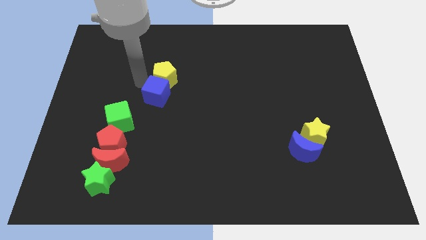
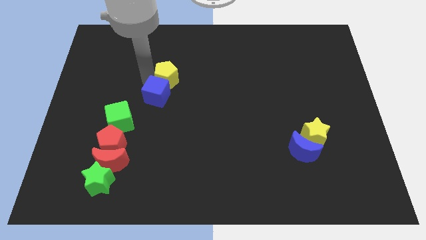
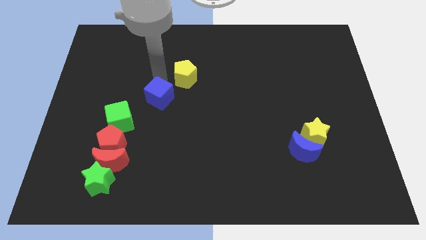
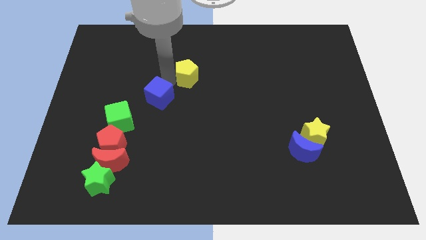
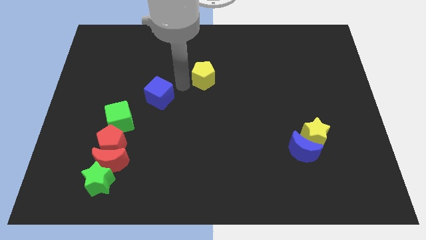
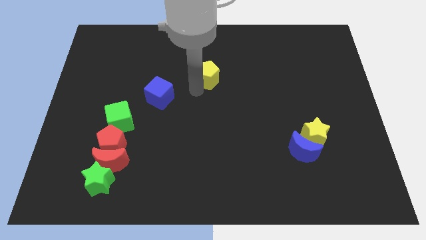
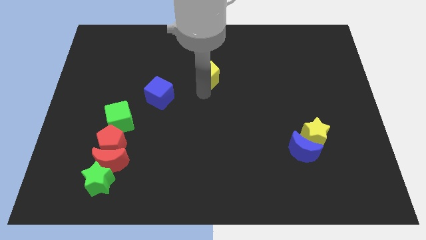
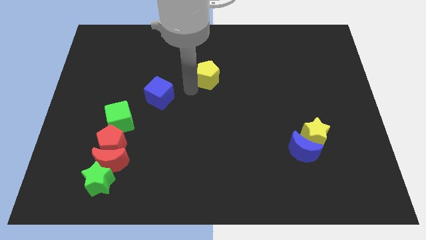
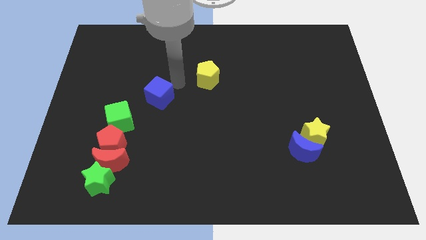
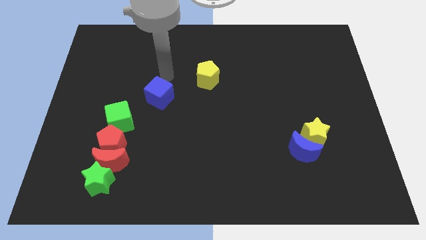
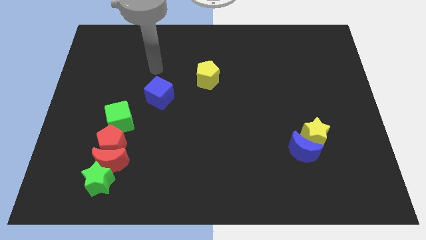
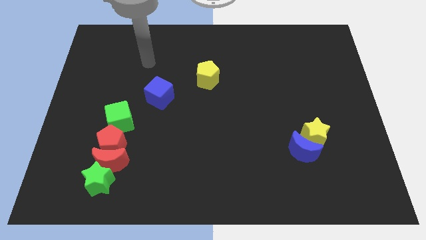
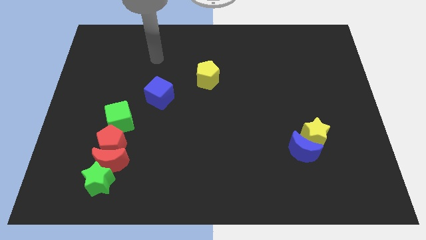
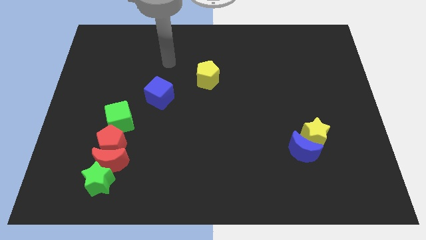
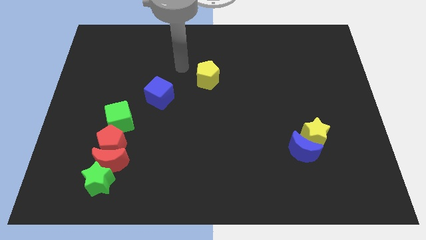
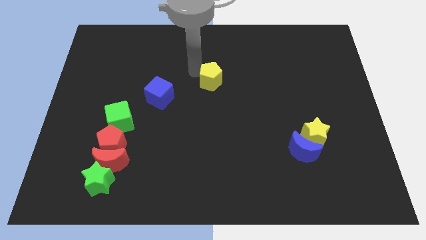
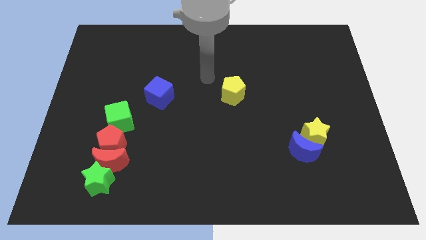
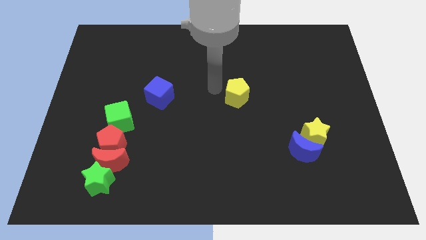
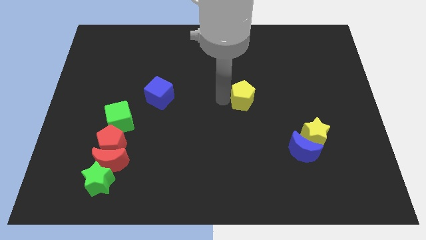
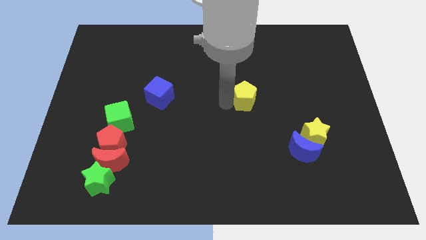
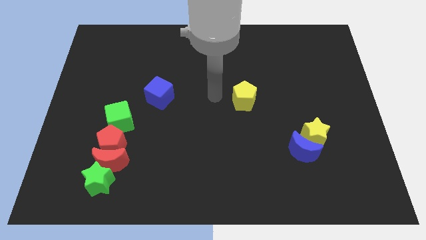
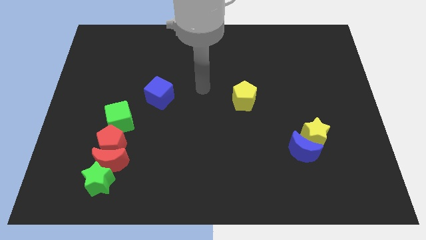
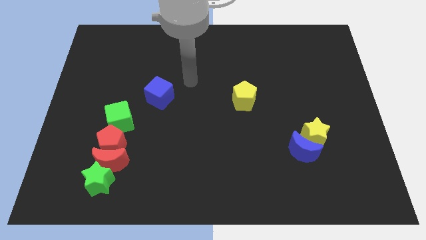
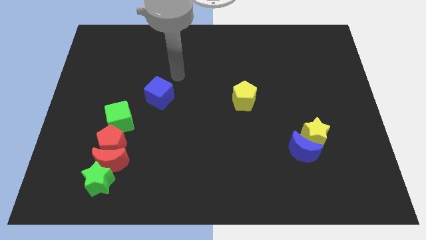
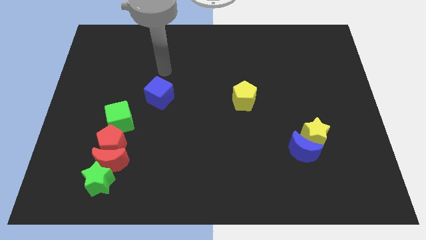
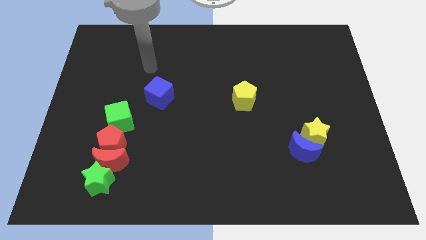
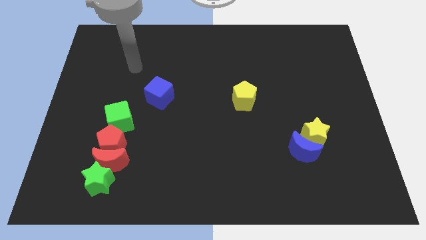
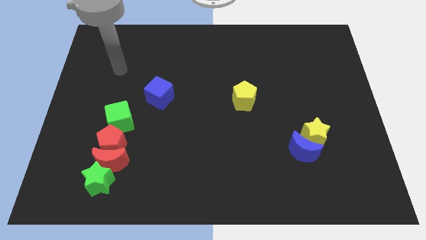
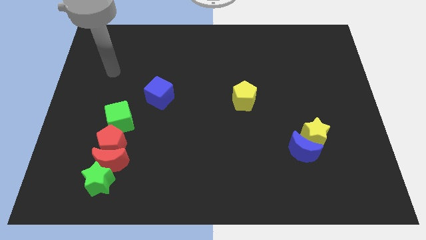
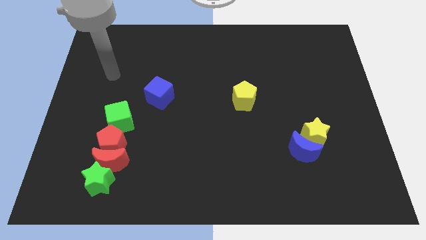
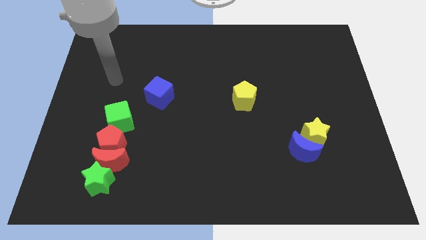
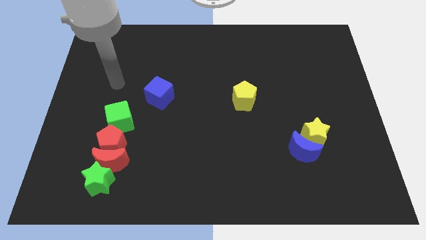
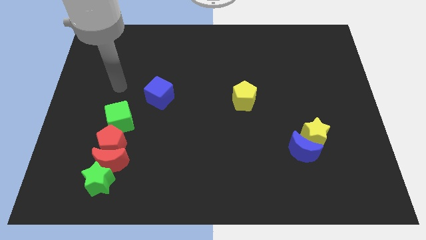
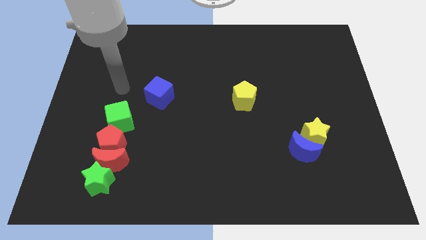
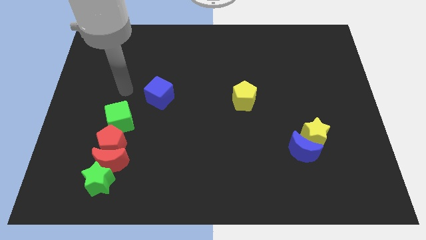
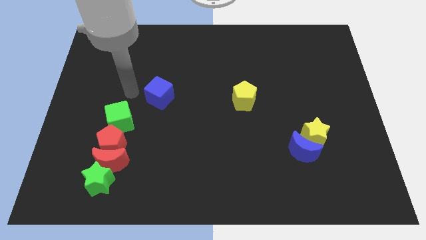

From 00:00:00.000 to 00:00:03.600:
separate the yellow pentagon from the blue cube

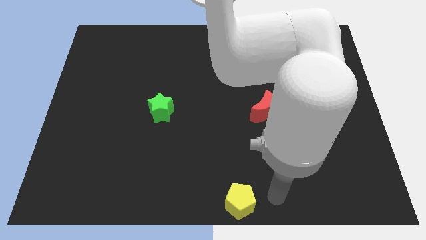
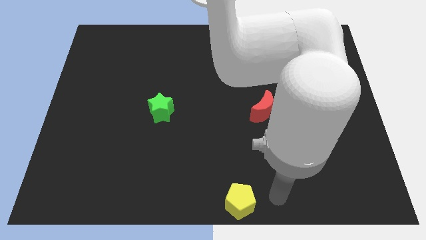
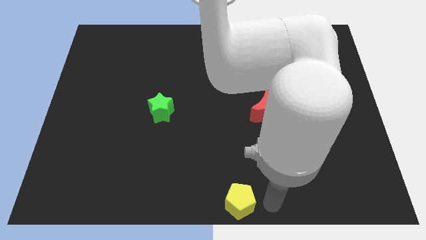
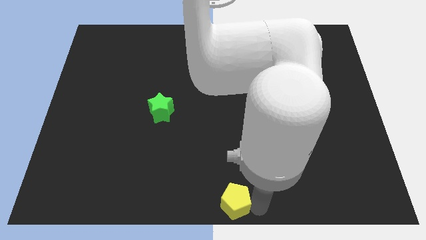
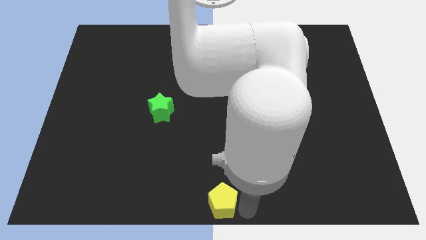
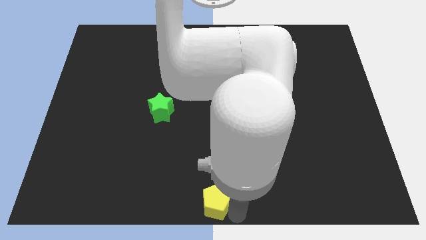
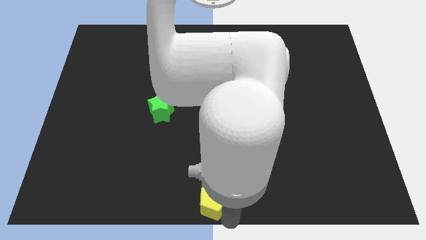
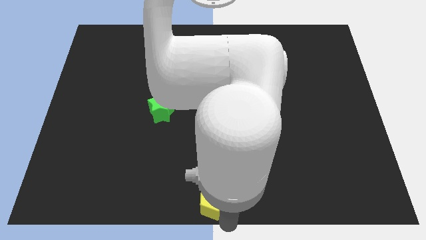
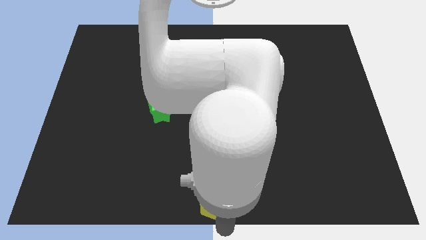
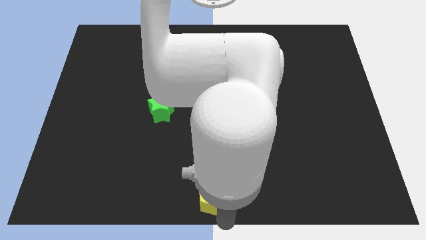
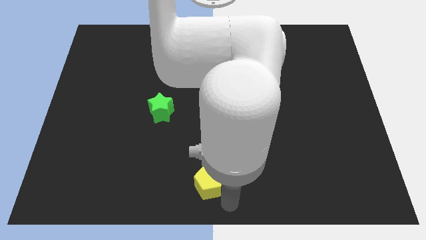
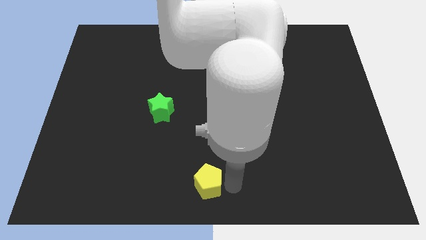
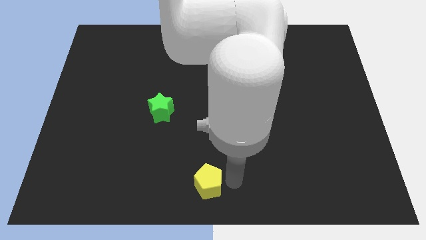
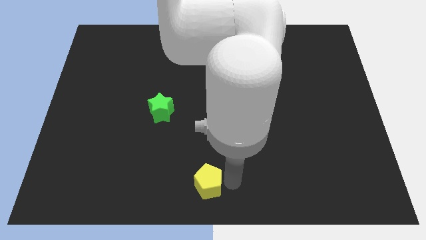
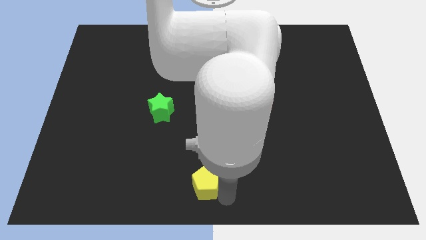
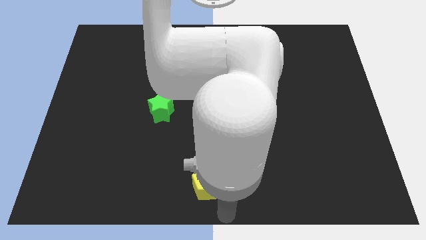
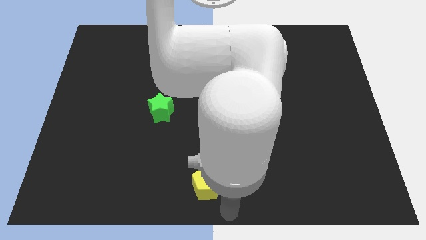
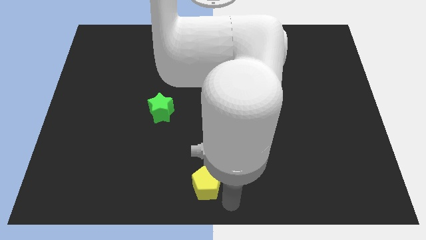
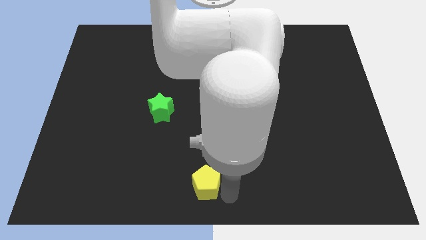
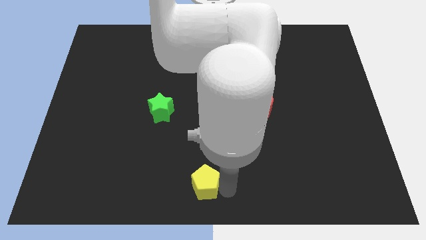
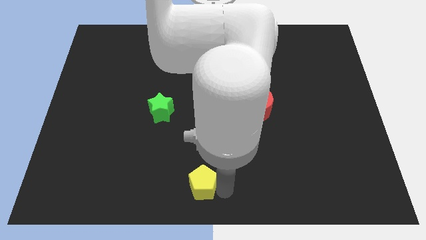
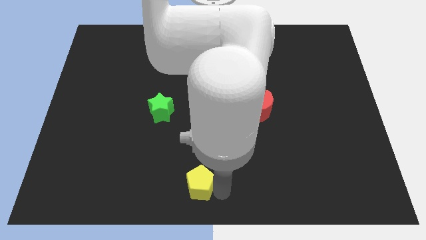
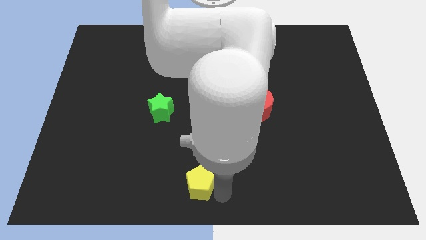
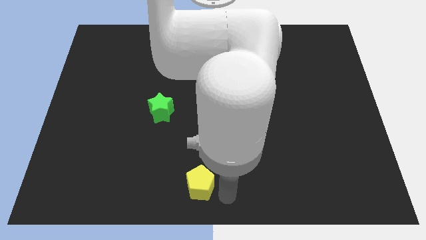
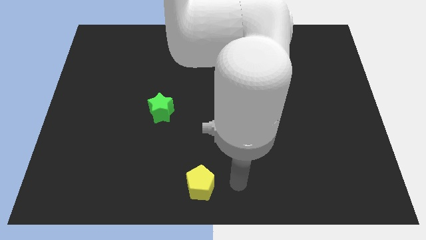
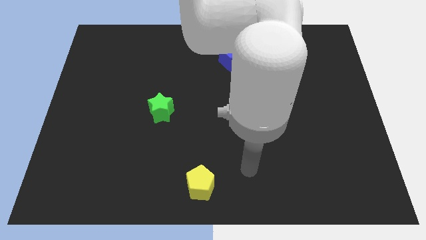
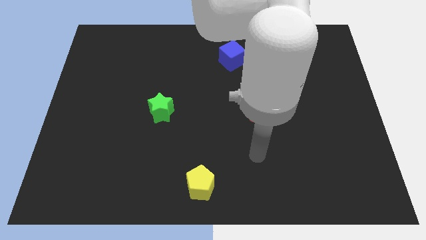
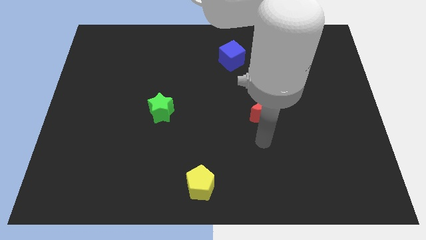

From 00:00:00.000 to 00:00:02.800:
place the yellow pentagon diagonally at the bottom left of the red crescent

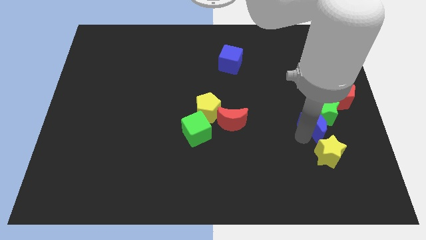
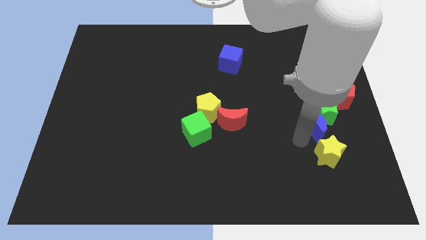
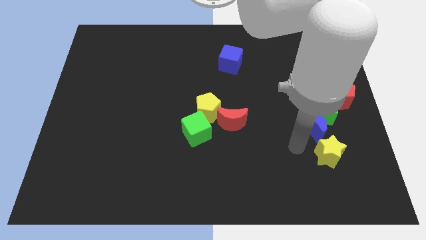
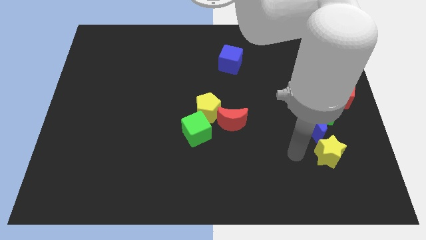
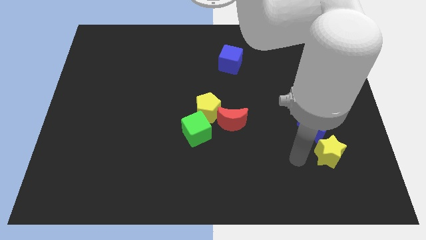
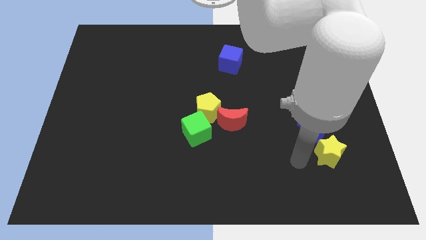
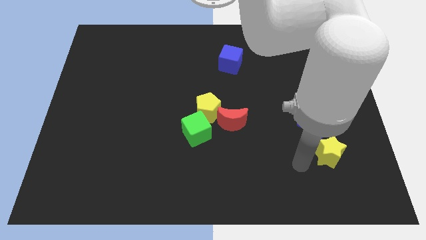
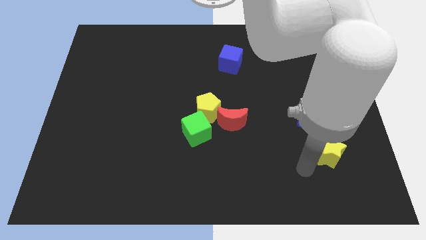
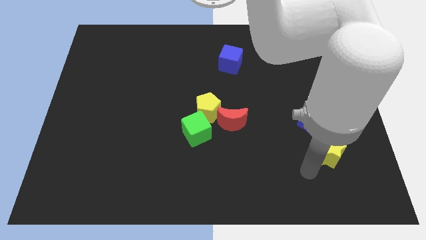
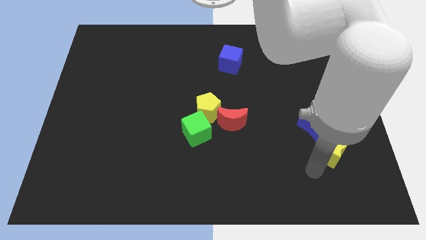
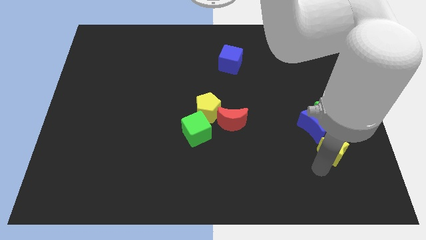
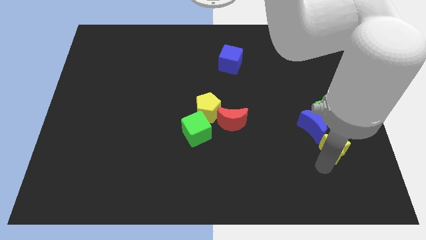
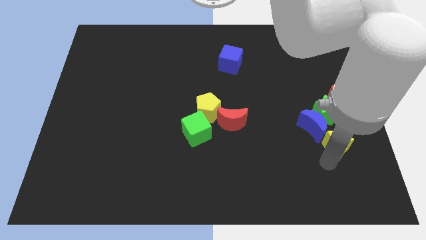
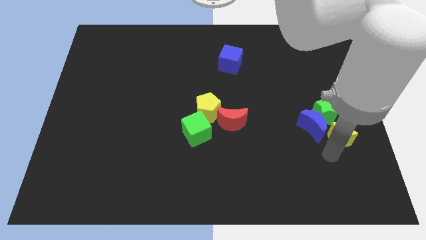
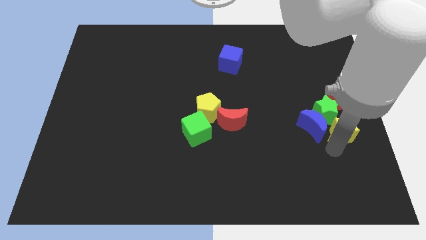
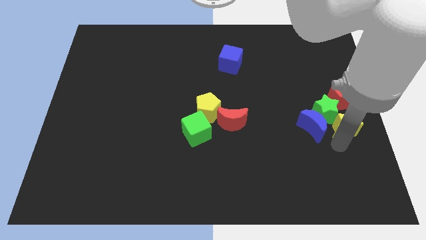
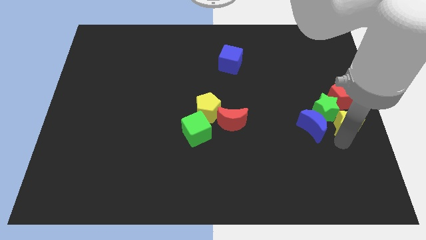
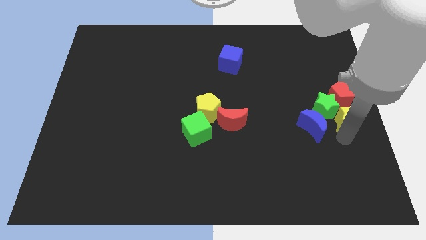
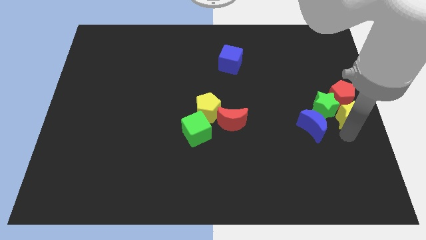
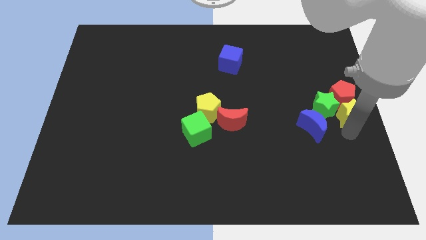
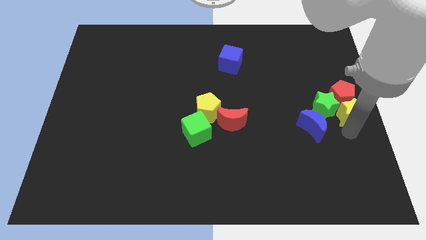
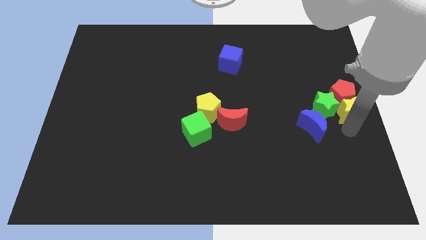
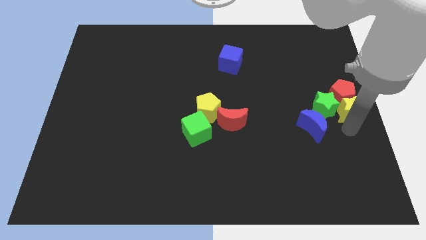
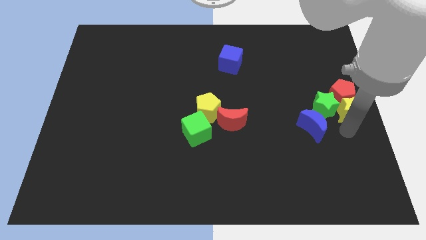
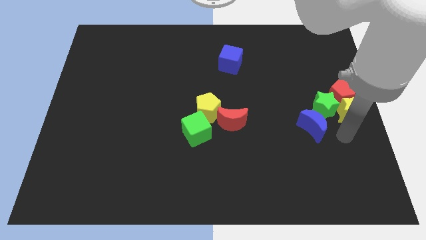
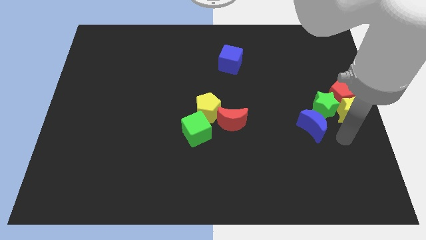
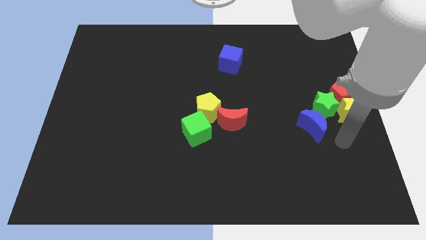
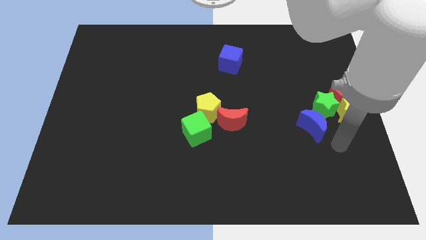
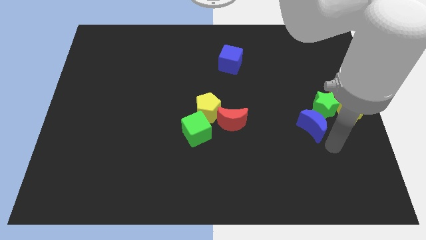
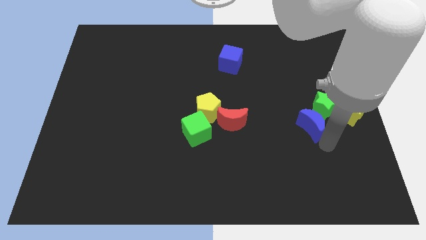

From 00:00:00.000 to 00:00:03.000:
place yellow star to the right of green star
